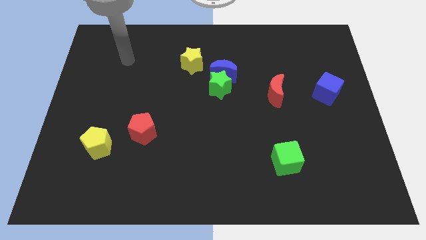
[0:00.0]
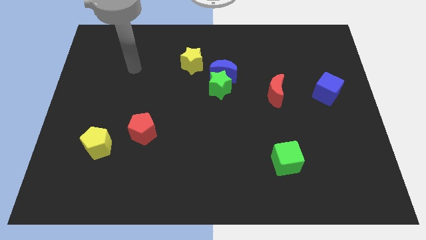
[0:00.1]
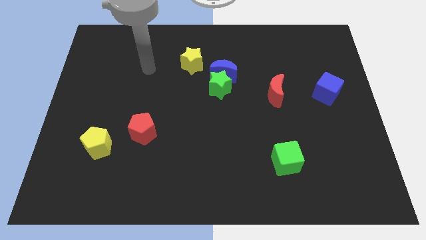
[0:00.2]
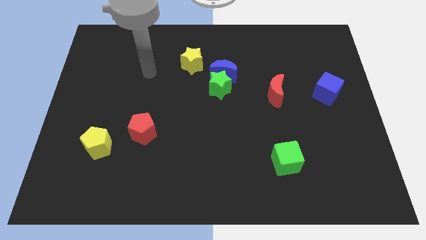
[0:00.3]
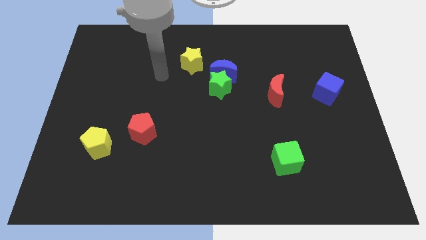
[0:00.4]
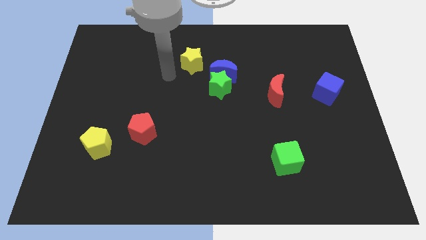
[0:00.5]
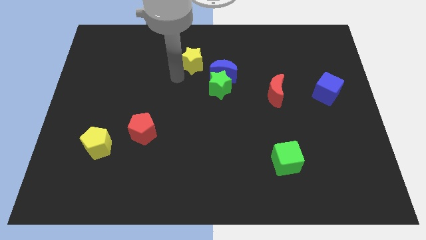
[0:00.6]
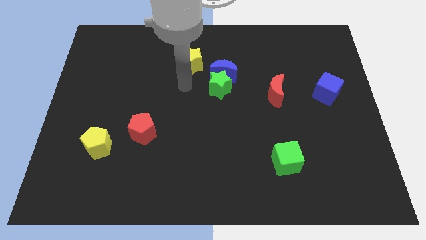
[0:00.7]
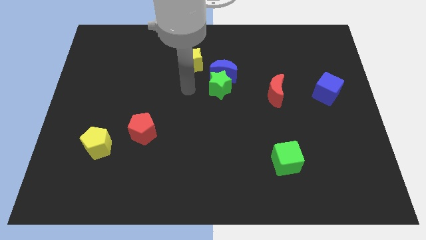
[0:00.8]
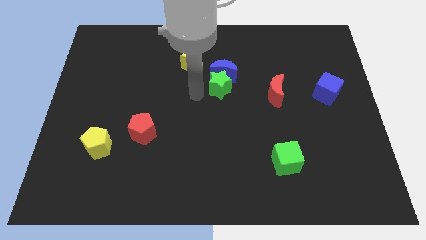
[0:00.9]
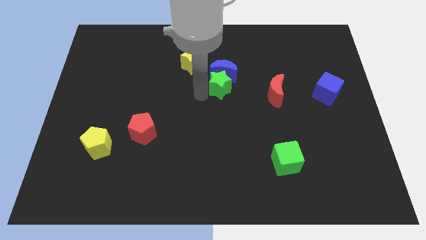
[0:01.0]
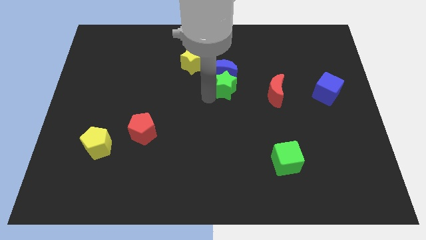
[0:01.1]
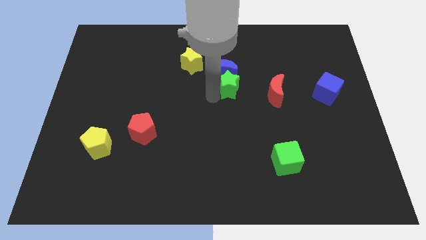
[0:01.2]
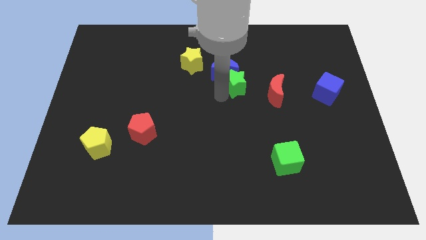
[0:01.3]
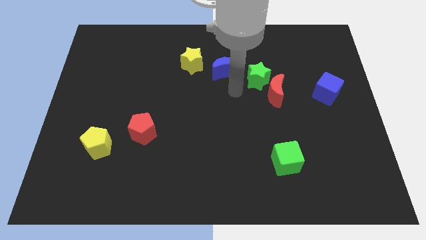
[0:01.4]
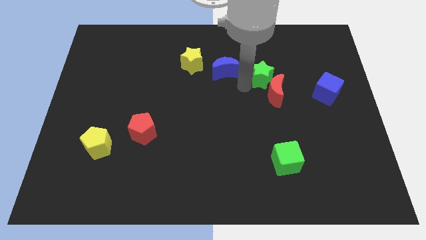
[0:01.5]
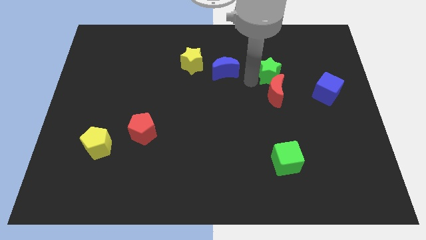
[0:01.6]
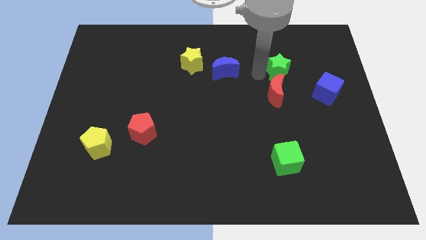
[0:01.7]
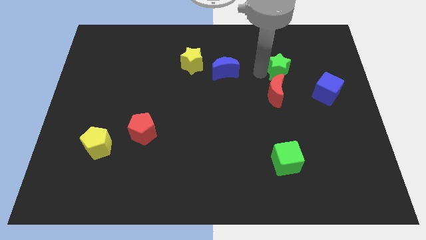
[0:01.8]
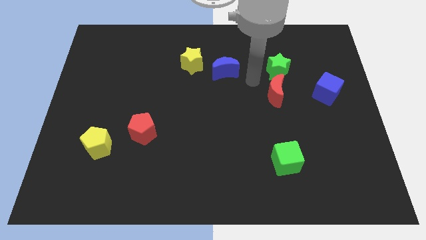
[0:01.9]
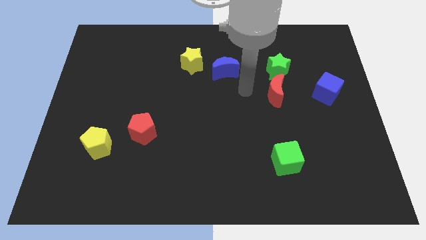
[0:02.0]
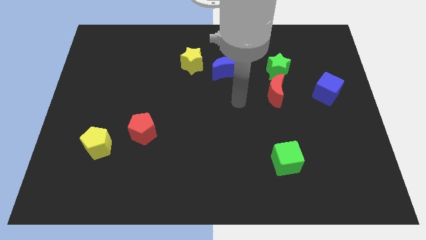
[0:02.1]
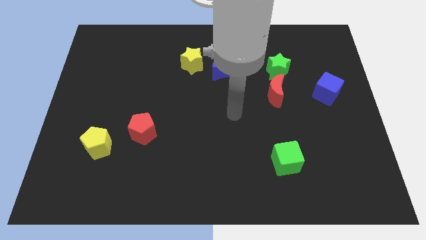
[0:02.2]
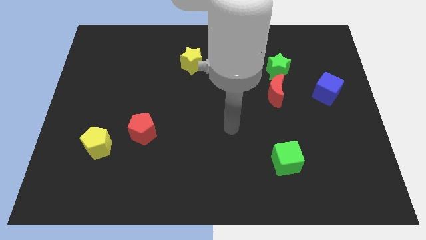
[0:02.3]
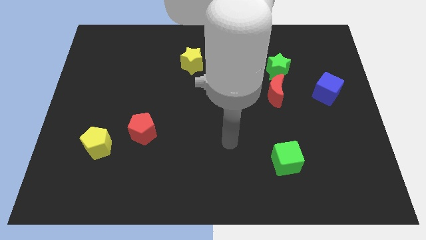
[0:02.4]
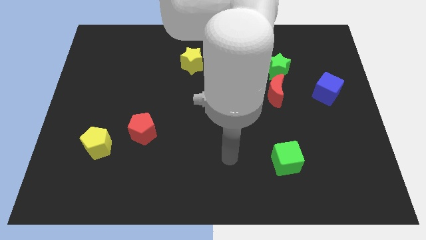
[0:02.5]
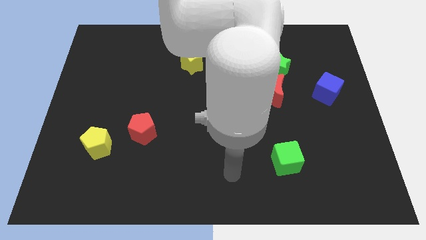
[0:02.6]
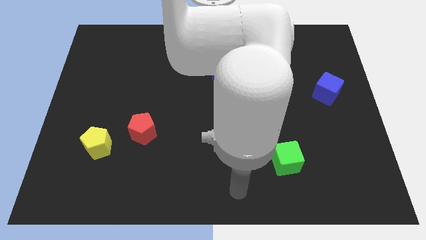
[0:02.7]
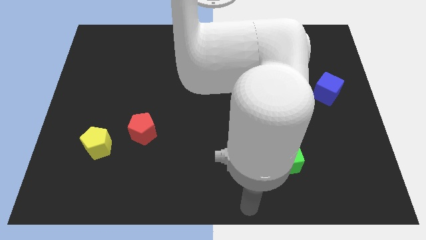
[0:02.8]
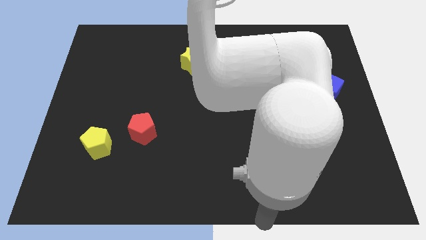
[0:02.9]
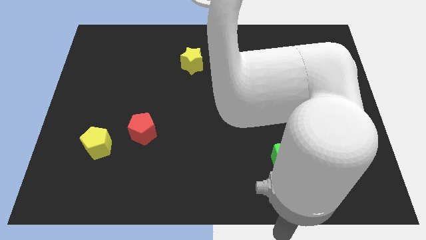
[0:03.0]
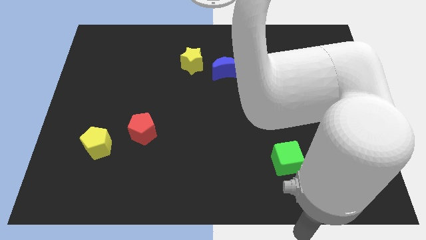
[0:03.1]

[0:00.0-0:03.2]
place the green star above the red crescent

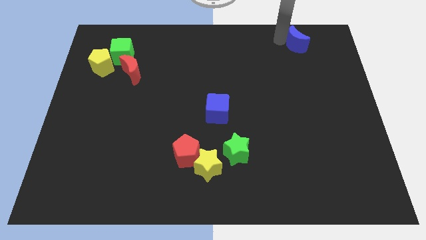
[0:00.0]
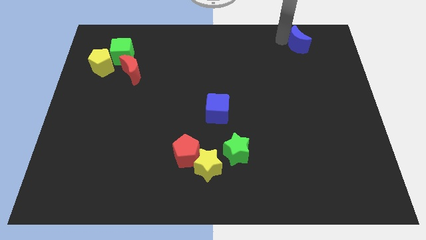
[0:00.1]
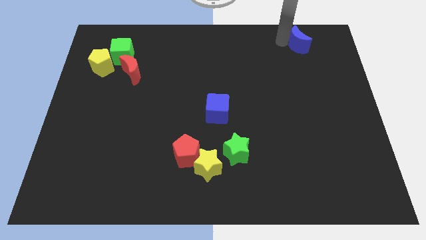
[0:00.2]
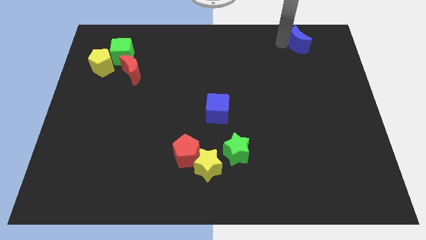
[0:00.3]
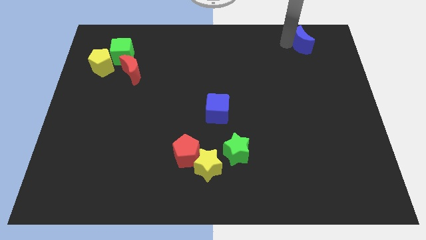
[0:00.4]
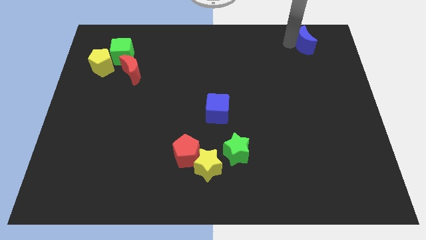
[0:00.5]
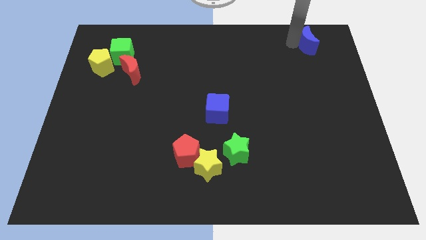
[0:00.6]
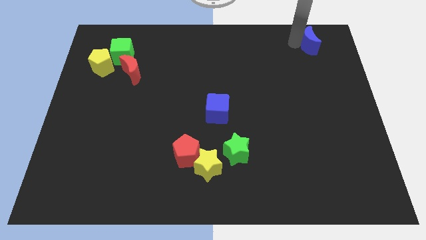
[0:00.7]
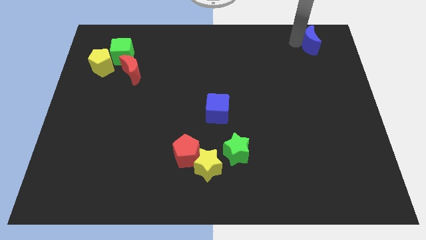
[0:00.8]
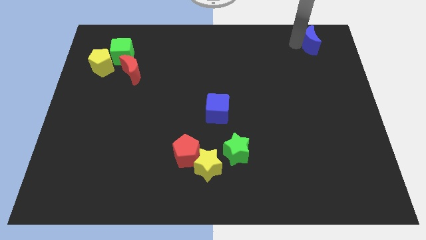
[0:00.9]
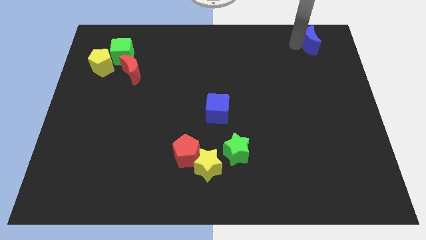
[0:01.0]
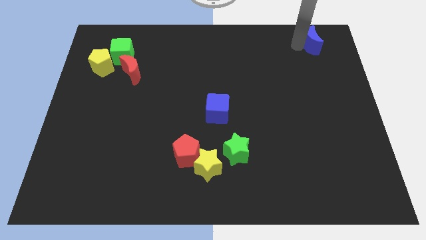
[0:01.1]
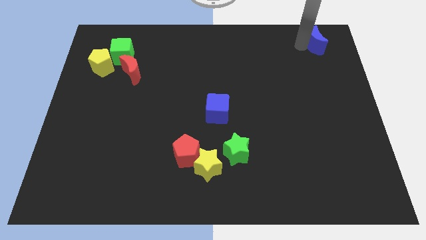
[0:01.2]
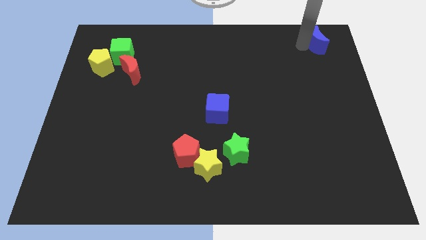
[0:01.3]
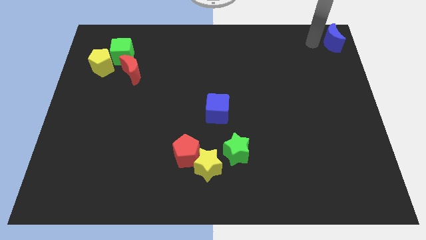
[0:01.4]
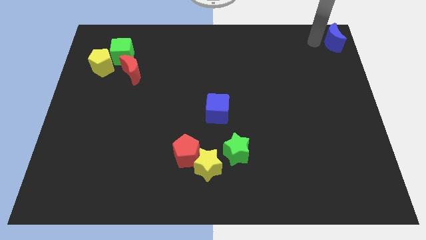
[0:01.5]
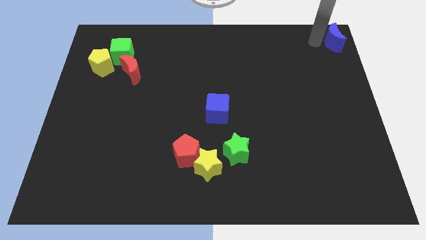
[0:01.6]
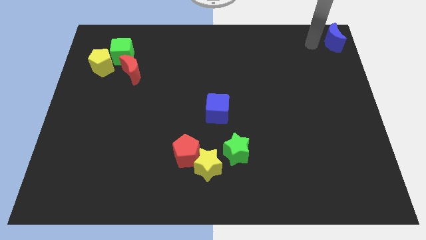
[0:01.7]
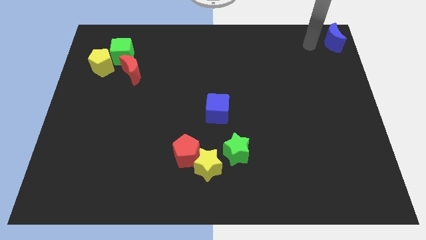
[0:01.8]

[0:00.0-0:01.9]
place the blue crescent at top right side of the board

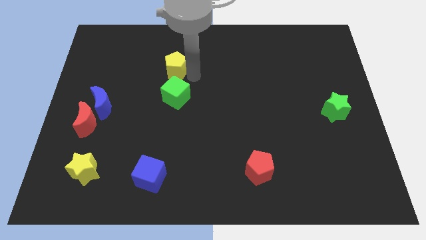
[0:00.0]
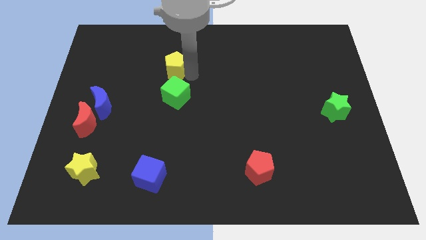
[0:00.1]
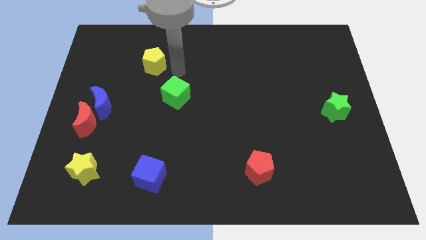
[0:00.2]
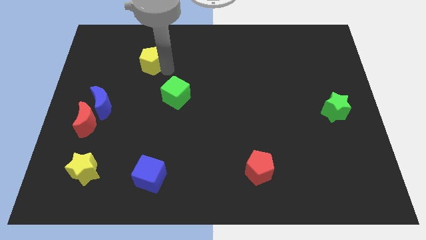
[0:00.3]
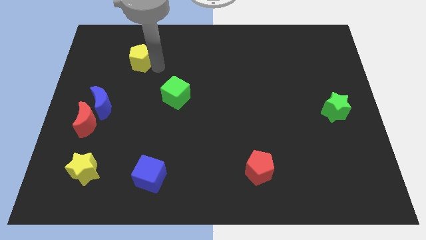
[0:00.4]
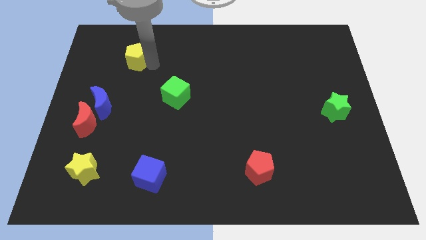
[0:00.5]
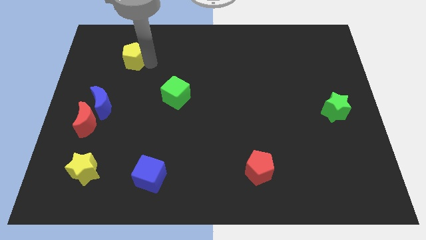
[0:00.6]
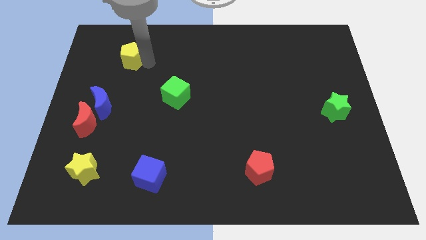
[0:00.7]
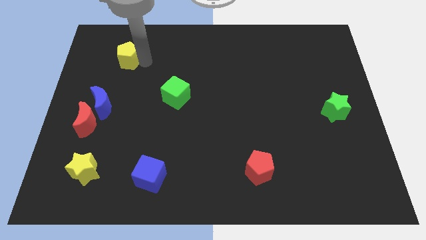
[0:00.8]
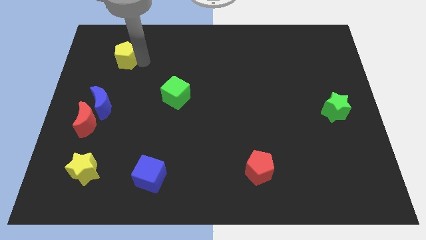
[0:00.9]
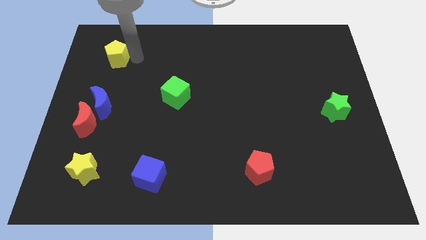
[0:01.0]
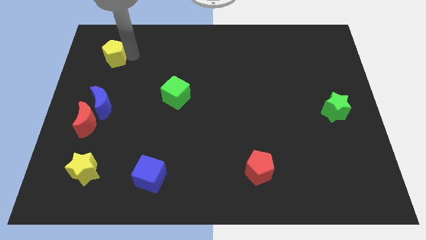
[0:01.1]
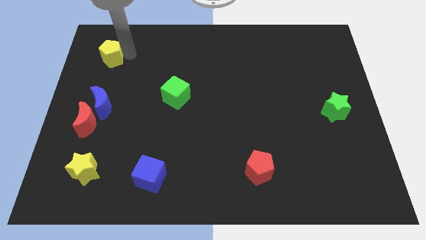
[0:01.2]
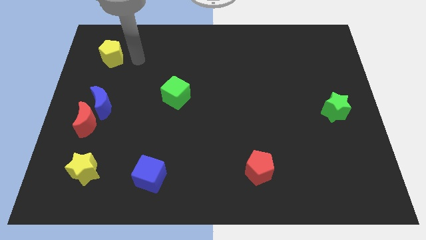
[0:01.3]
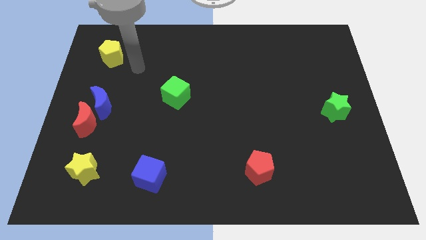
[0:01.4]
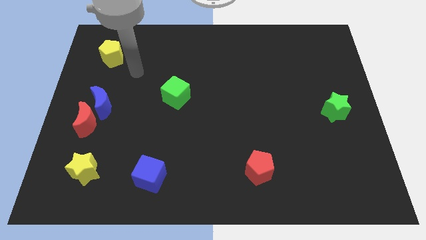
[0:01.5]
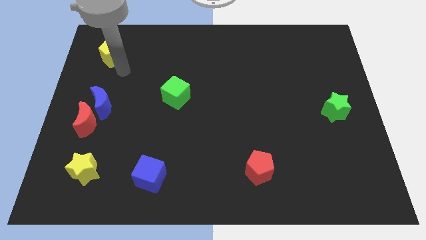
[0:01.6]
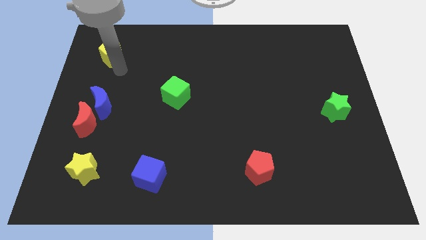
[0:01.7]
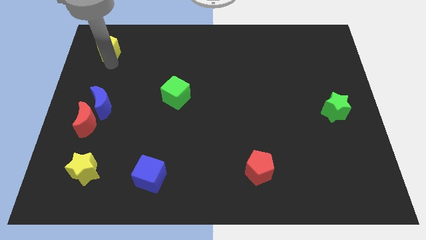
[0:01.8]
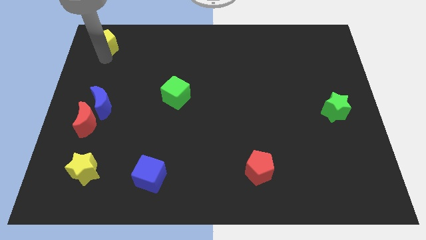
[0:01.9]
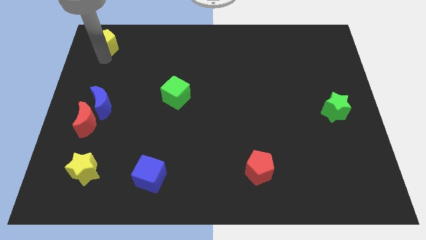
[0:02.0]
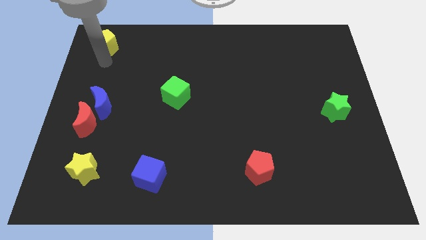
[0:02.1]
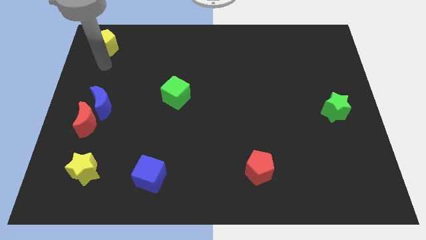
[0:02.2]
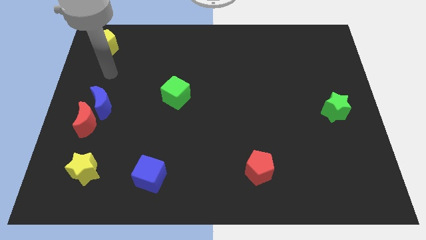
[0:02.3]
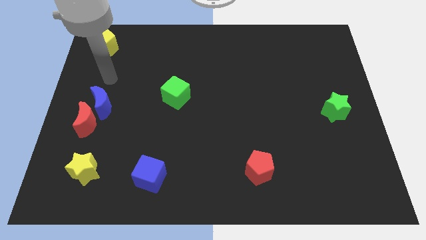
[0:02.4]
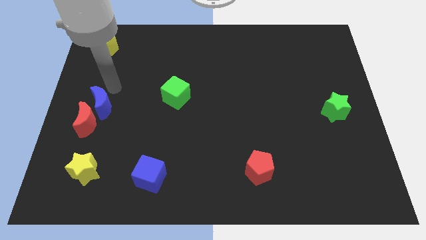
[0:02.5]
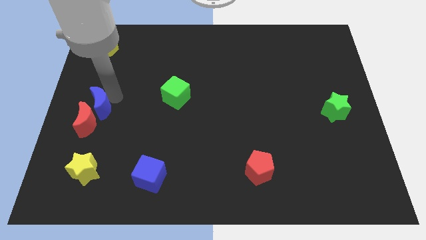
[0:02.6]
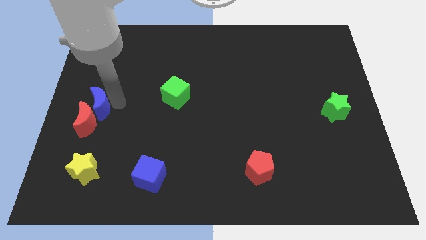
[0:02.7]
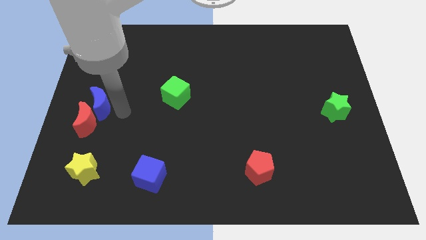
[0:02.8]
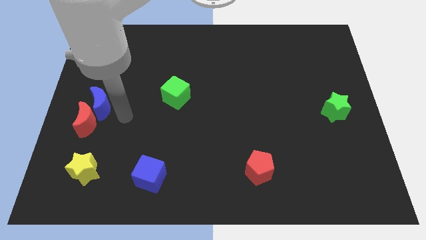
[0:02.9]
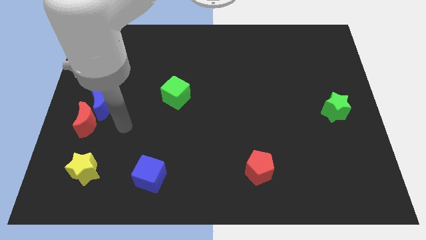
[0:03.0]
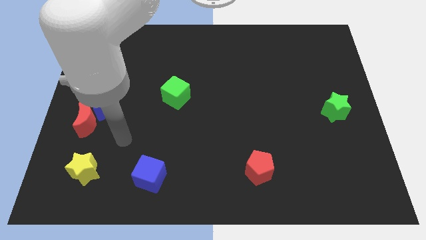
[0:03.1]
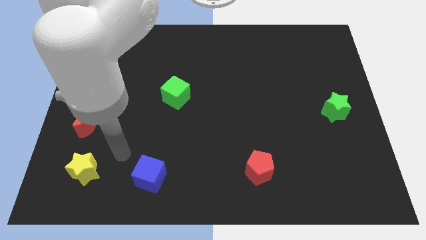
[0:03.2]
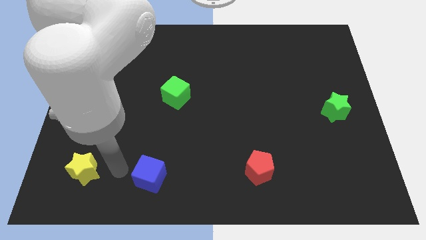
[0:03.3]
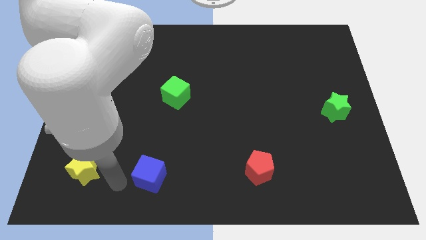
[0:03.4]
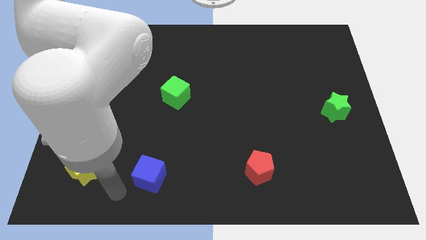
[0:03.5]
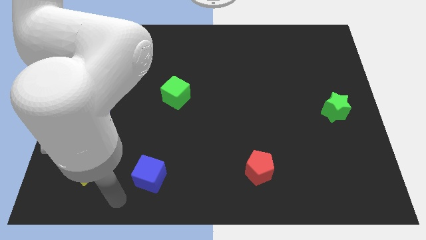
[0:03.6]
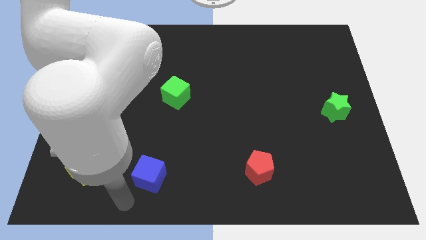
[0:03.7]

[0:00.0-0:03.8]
move yellow pentagon to the top left side of the board
